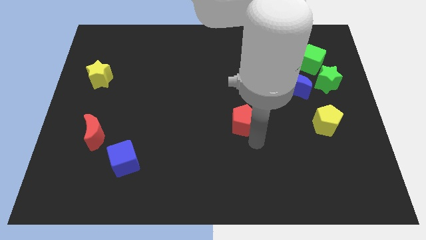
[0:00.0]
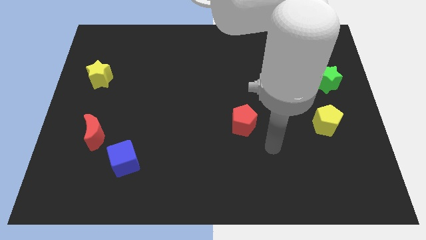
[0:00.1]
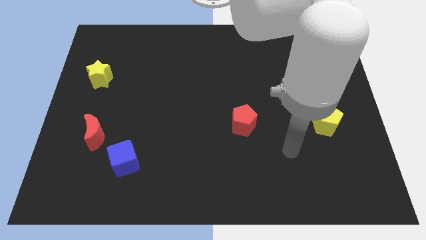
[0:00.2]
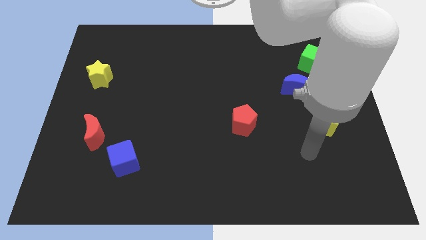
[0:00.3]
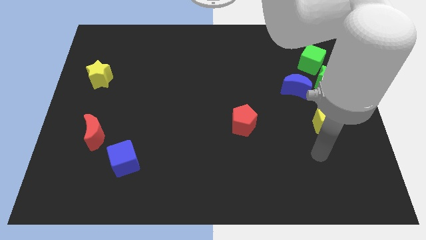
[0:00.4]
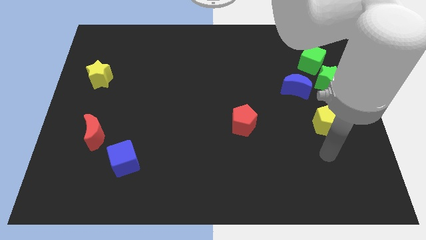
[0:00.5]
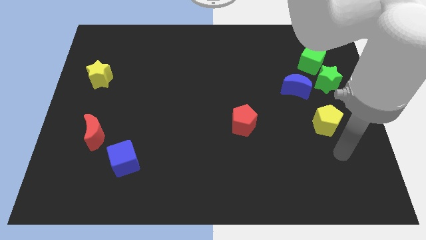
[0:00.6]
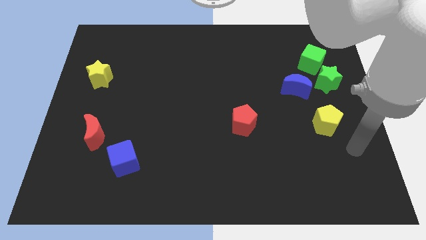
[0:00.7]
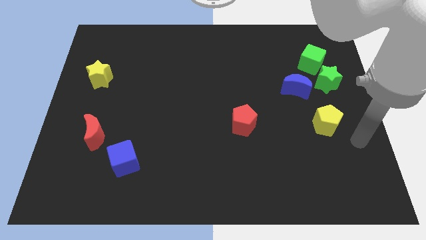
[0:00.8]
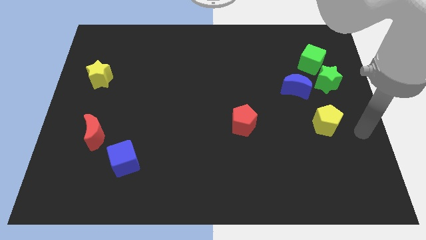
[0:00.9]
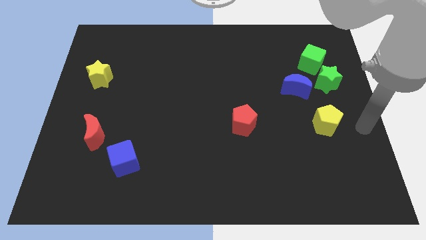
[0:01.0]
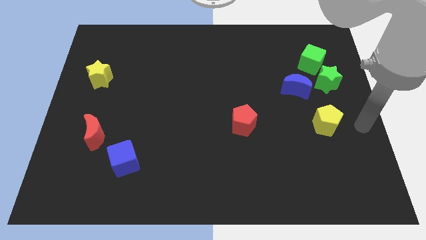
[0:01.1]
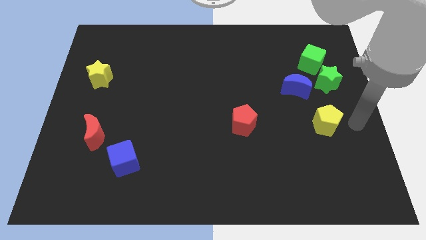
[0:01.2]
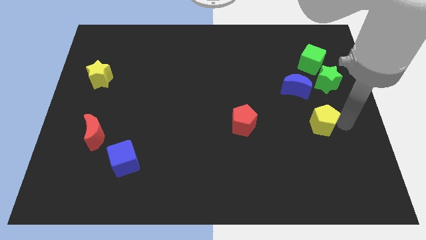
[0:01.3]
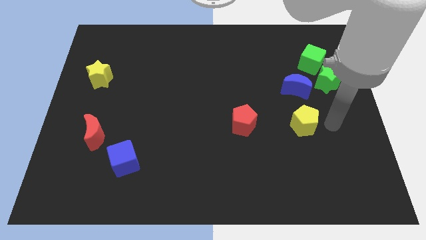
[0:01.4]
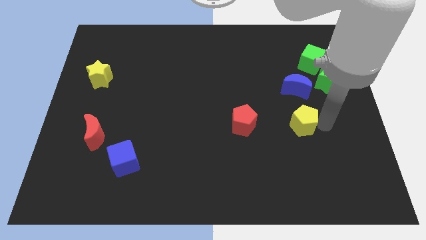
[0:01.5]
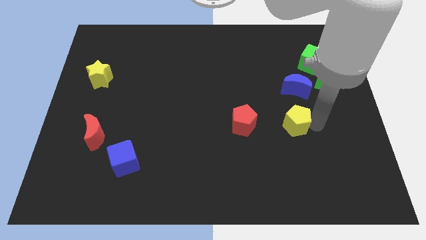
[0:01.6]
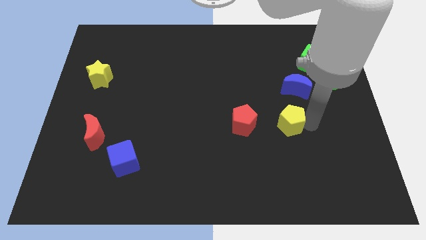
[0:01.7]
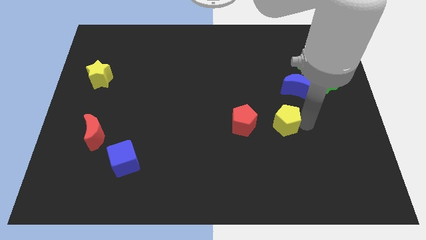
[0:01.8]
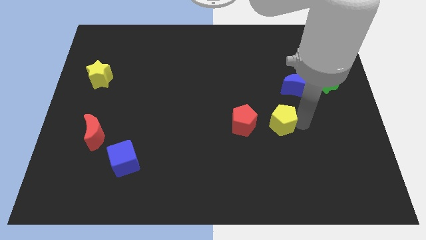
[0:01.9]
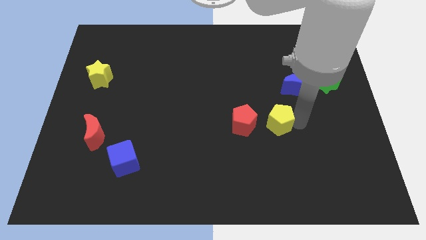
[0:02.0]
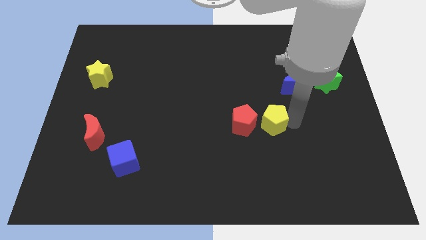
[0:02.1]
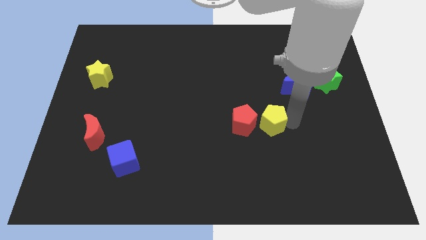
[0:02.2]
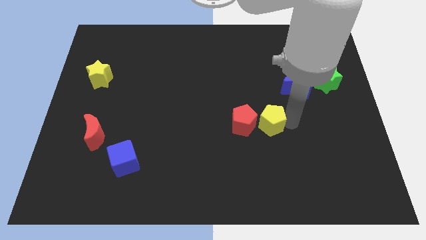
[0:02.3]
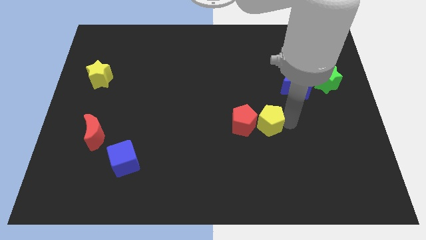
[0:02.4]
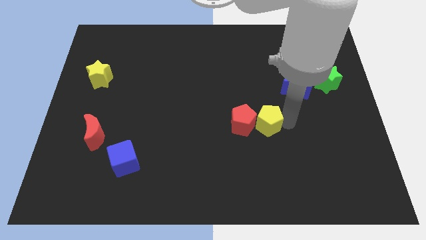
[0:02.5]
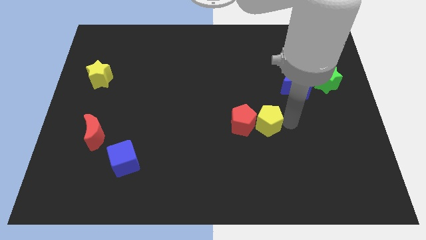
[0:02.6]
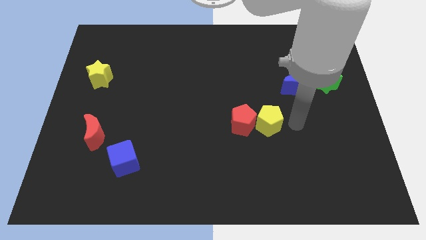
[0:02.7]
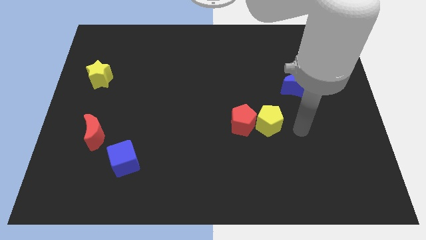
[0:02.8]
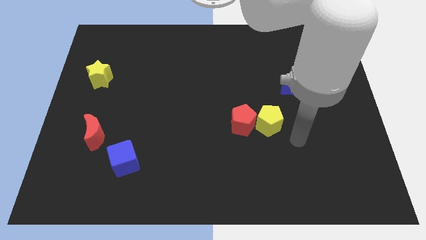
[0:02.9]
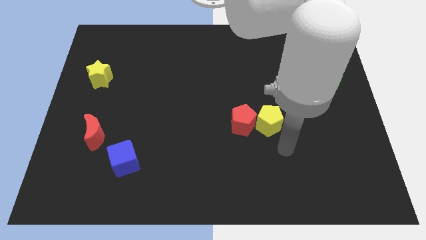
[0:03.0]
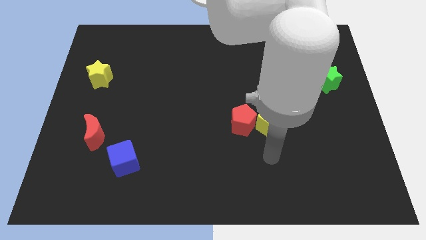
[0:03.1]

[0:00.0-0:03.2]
move yellow pentagon to the right side of the red pentagon

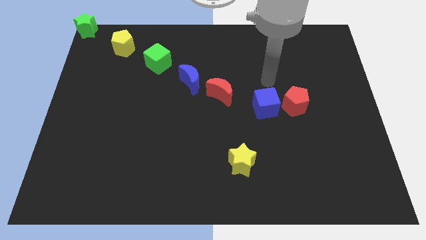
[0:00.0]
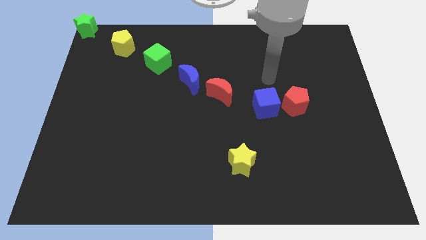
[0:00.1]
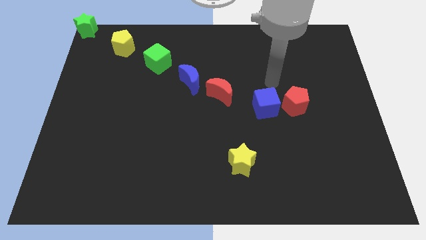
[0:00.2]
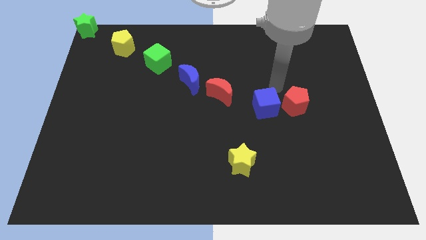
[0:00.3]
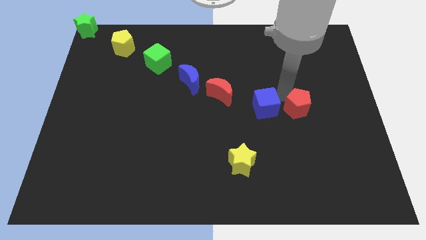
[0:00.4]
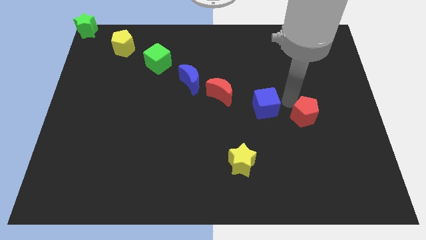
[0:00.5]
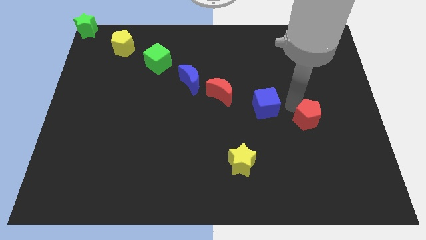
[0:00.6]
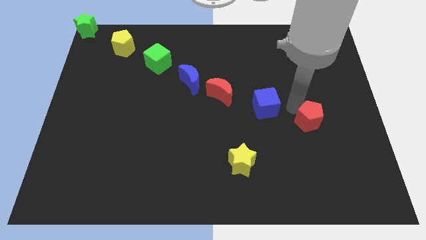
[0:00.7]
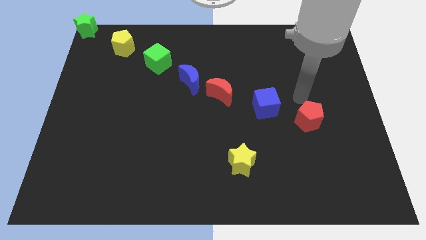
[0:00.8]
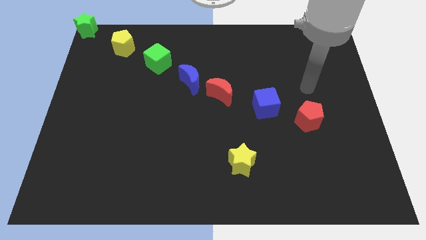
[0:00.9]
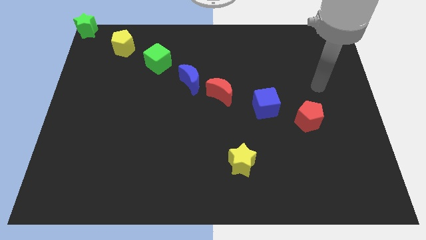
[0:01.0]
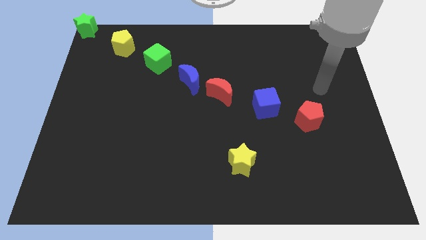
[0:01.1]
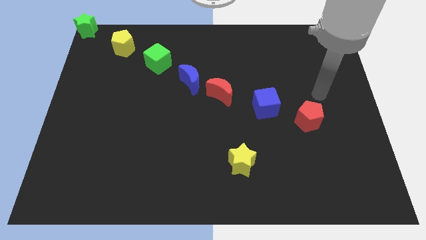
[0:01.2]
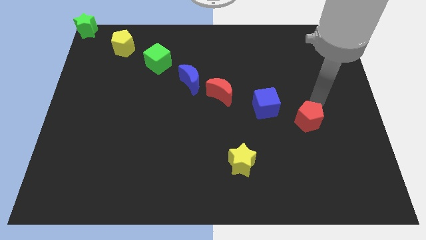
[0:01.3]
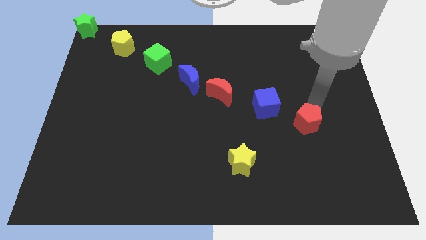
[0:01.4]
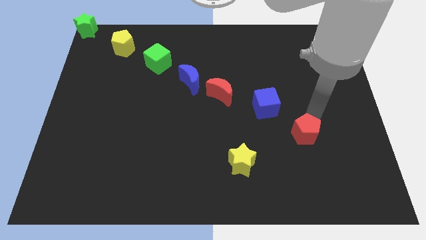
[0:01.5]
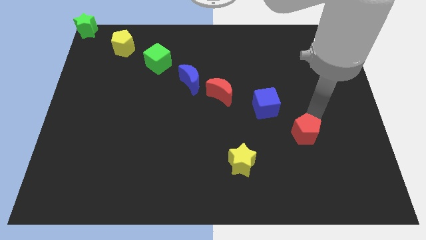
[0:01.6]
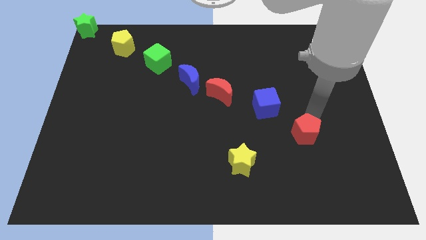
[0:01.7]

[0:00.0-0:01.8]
move the red pentagon away from the right side of the blue cube

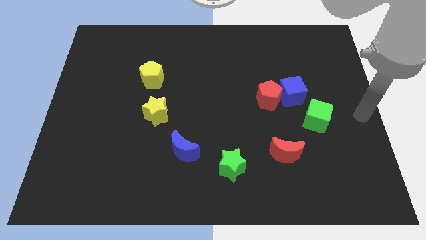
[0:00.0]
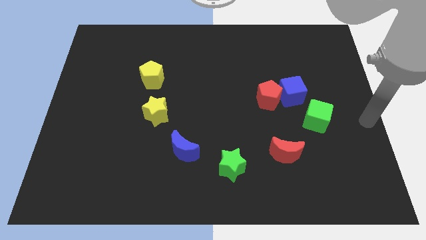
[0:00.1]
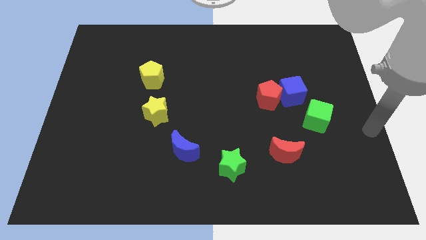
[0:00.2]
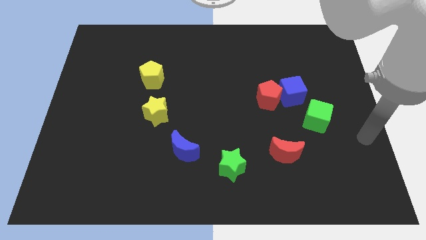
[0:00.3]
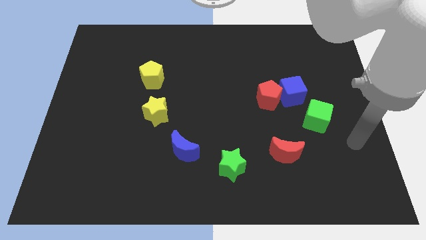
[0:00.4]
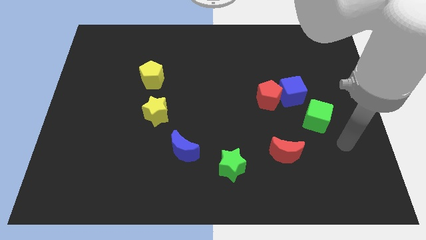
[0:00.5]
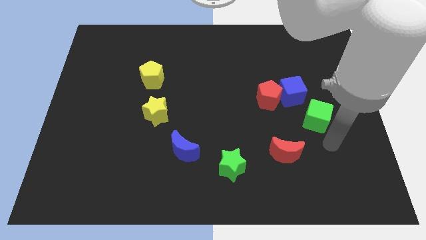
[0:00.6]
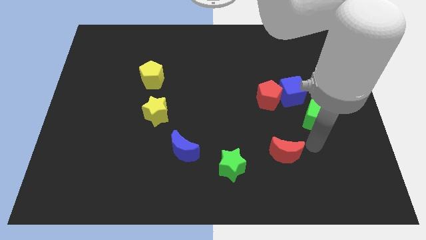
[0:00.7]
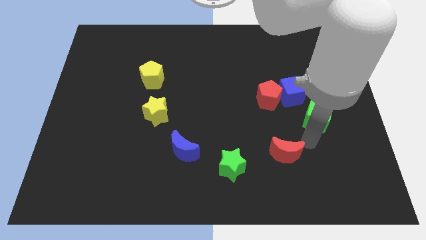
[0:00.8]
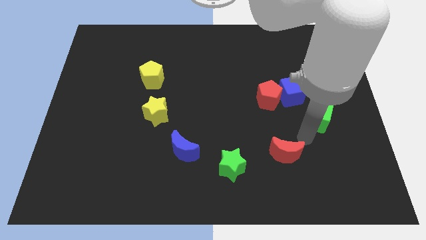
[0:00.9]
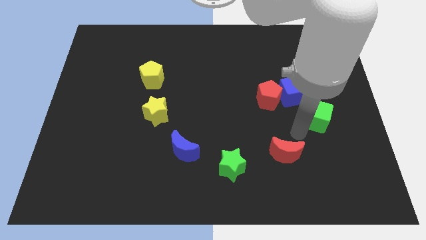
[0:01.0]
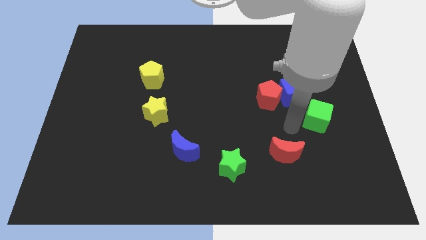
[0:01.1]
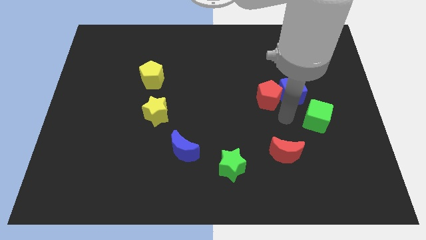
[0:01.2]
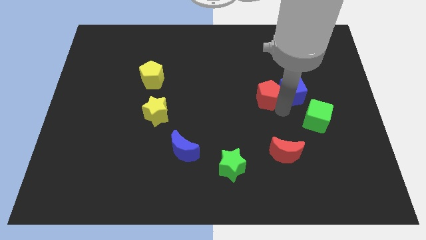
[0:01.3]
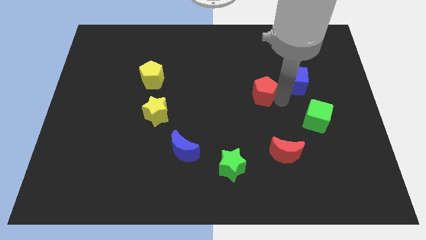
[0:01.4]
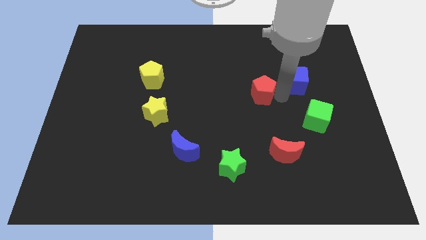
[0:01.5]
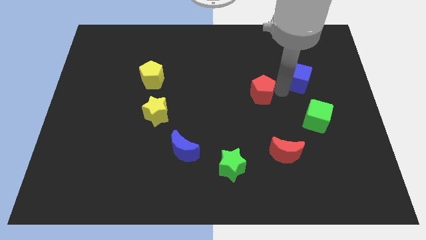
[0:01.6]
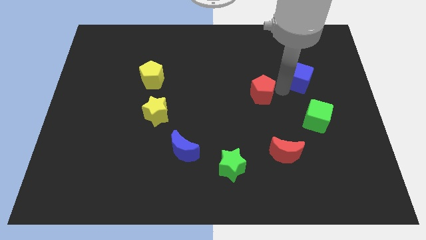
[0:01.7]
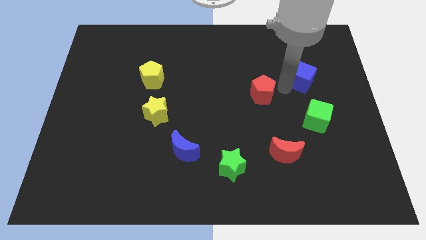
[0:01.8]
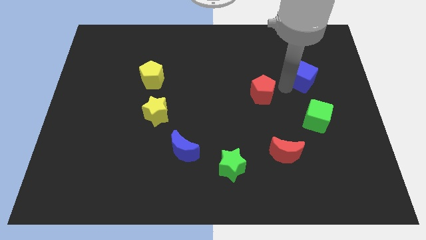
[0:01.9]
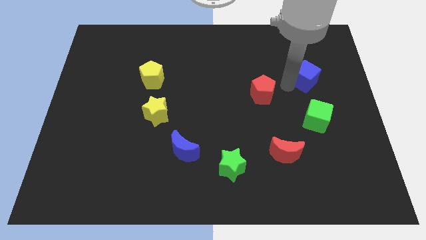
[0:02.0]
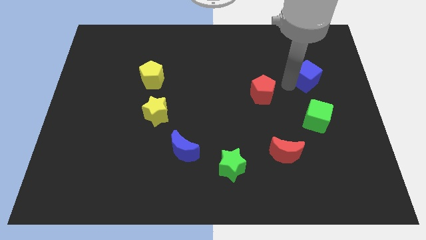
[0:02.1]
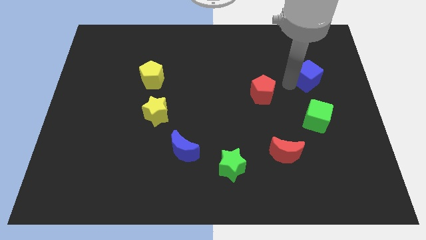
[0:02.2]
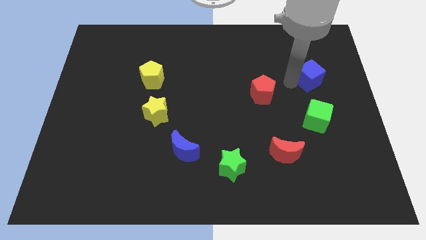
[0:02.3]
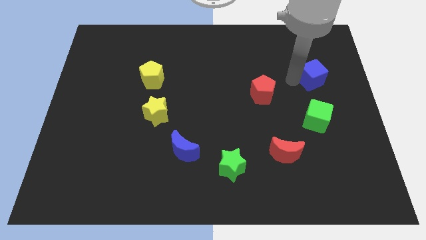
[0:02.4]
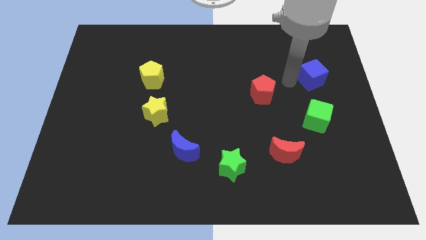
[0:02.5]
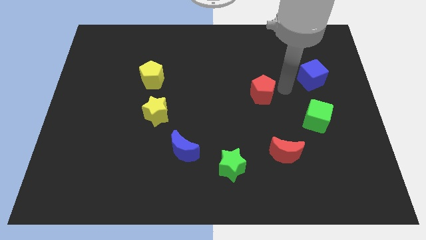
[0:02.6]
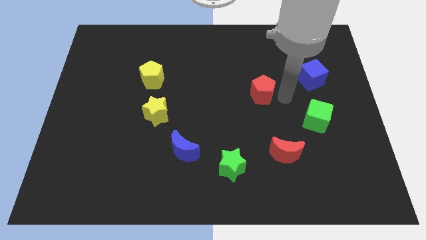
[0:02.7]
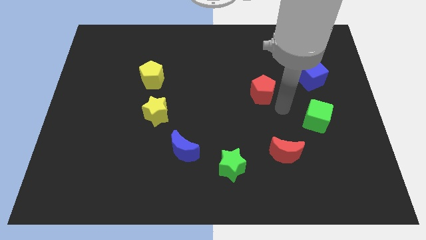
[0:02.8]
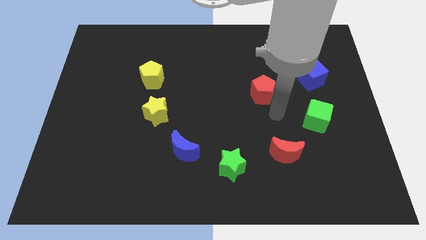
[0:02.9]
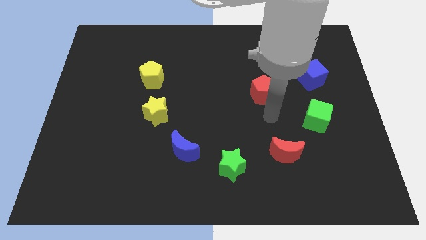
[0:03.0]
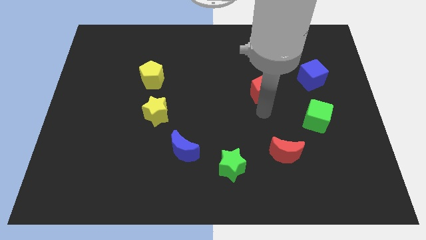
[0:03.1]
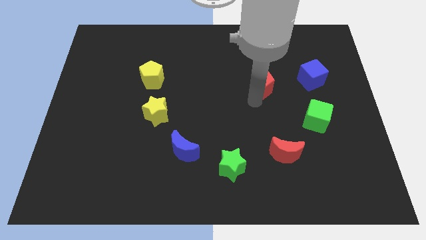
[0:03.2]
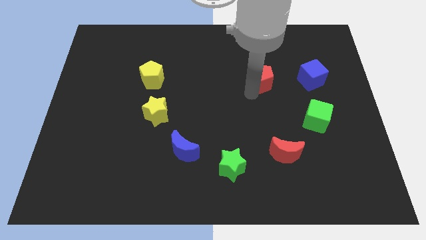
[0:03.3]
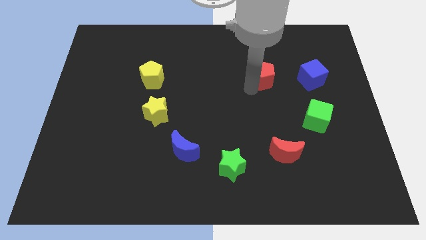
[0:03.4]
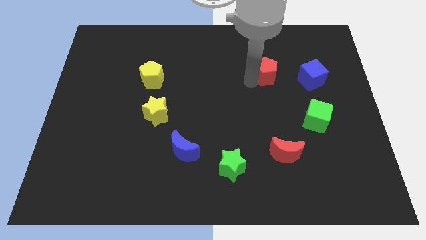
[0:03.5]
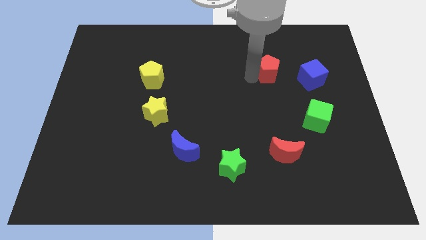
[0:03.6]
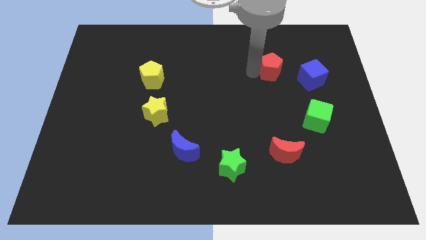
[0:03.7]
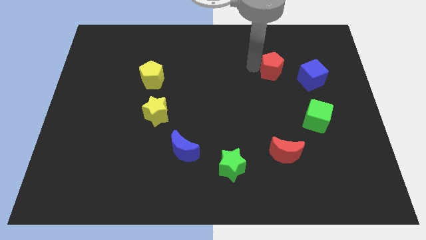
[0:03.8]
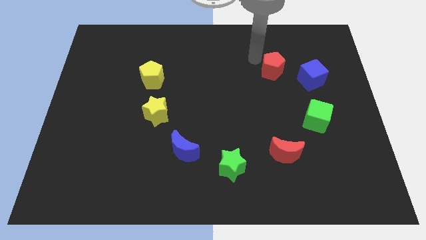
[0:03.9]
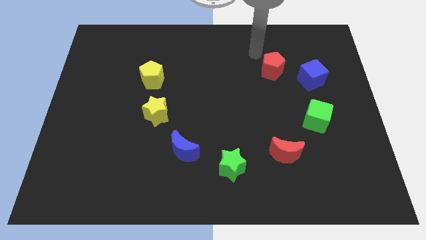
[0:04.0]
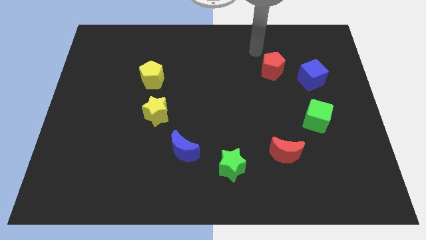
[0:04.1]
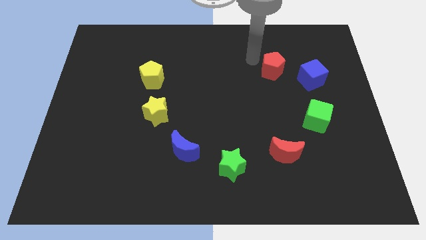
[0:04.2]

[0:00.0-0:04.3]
seperate the red pentagon and blue cube
